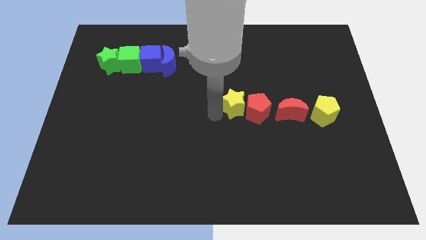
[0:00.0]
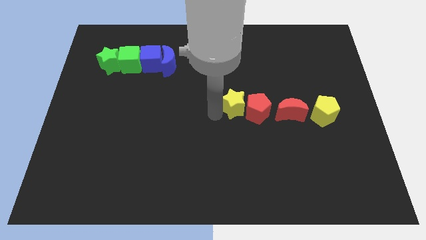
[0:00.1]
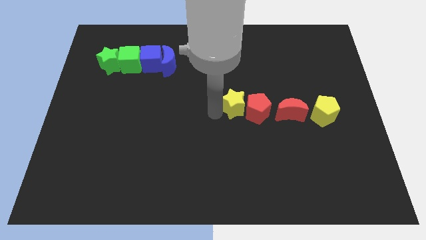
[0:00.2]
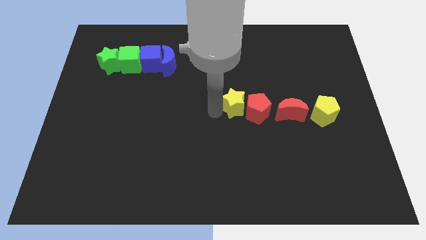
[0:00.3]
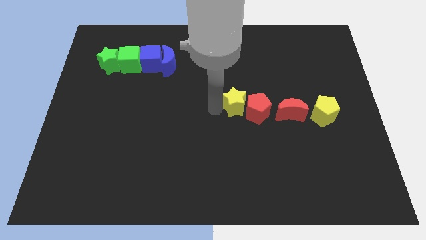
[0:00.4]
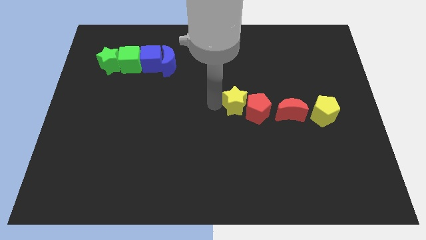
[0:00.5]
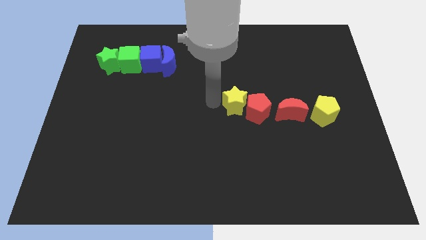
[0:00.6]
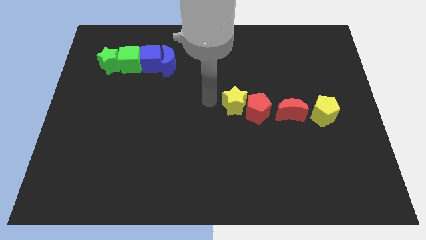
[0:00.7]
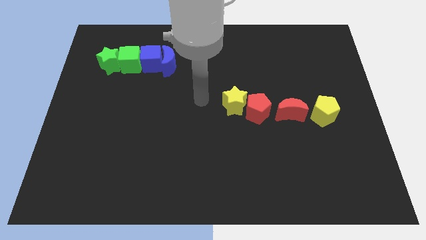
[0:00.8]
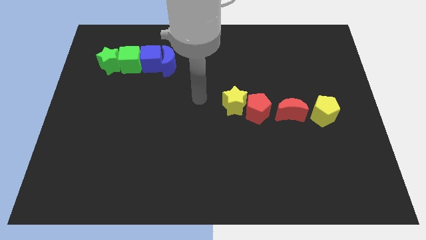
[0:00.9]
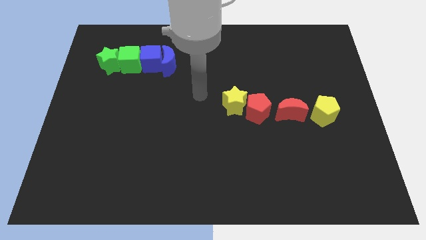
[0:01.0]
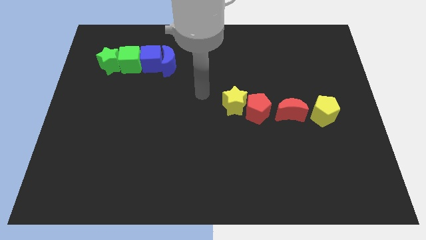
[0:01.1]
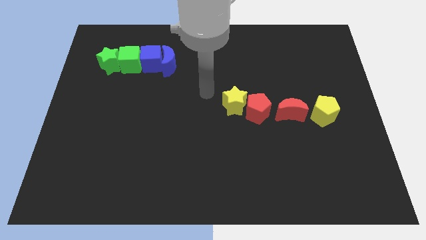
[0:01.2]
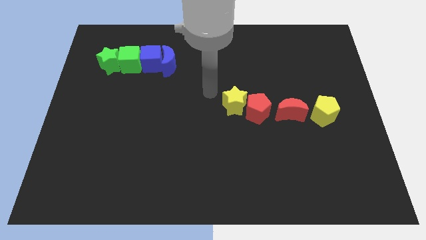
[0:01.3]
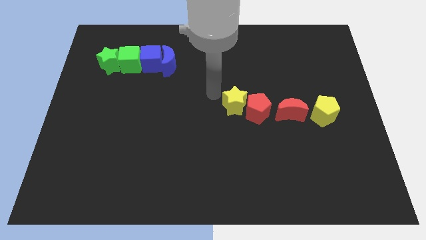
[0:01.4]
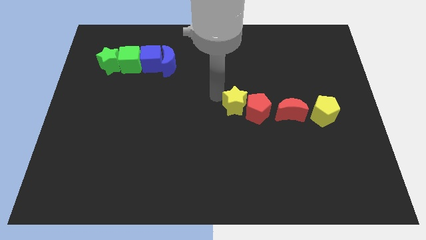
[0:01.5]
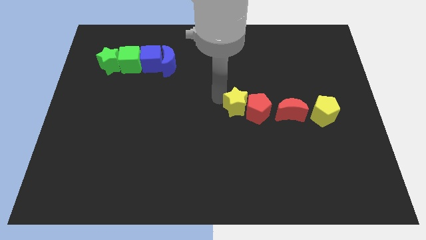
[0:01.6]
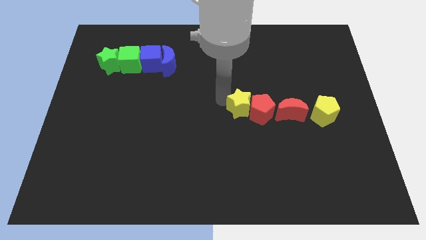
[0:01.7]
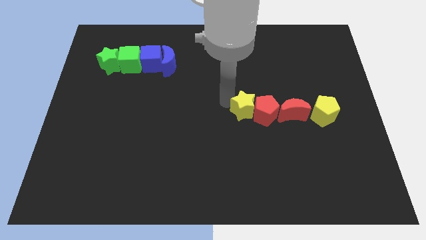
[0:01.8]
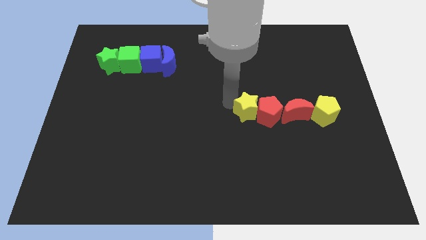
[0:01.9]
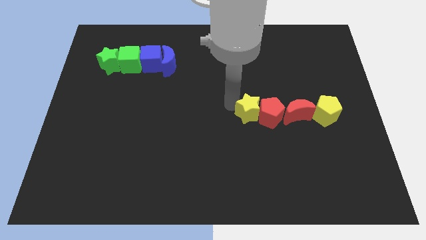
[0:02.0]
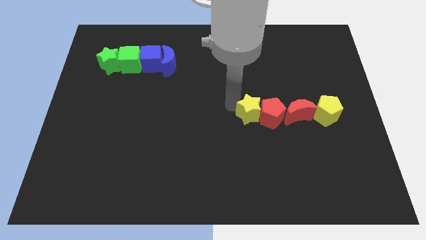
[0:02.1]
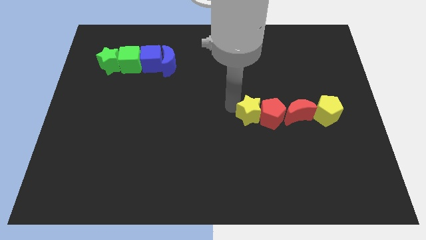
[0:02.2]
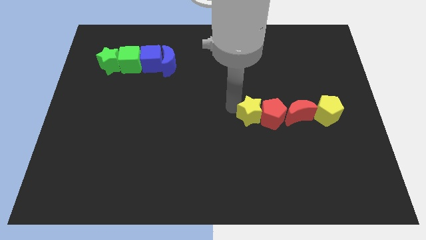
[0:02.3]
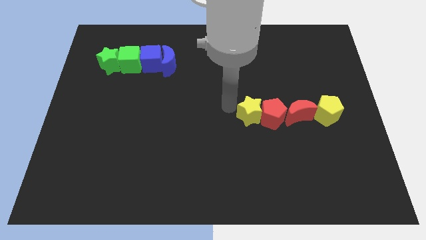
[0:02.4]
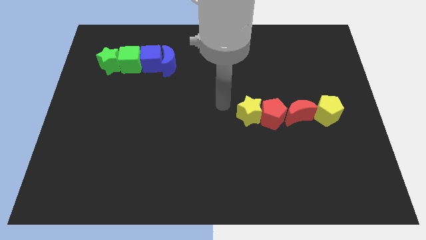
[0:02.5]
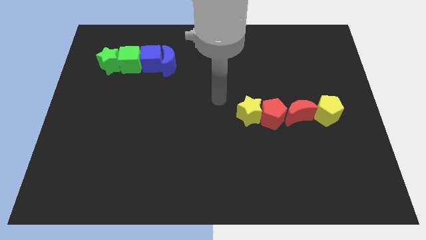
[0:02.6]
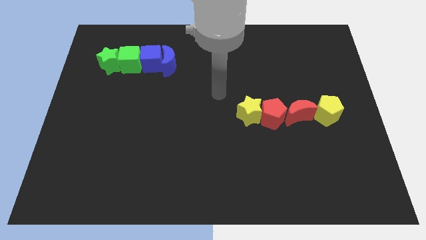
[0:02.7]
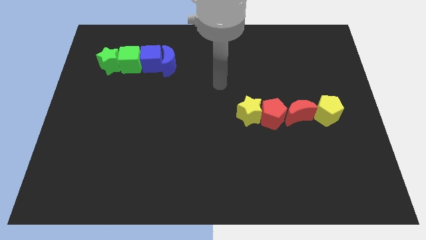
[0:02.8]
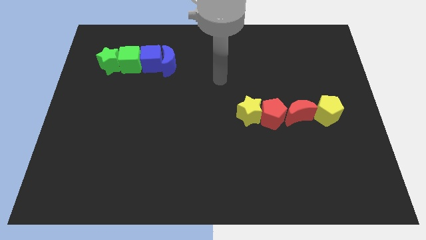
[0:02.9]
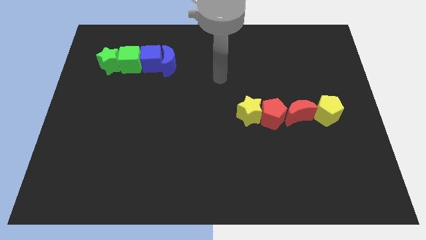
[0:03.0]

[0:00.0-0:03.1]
move yellow star to group of blocks

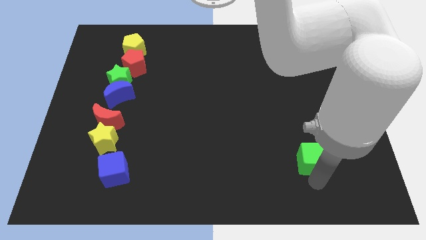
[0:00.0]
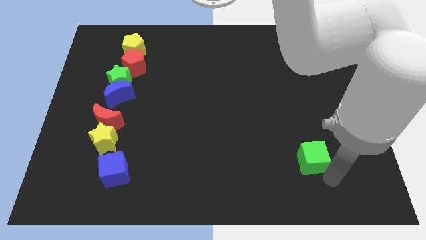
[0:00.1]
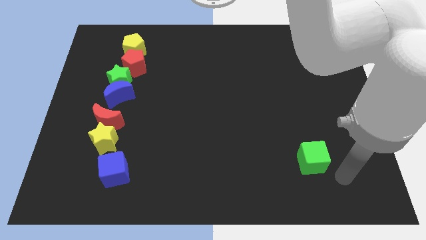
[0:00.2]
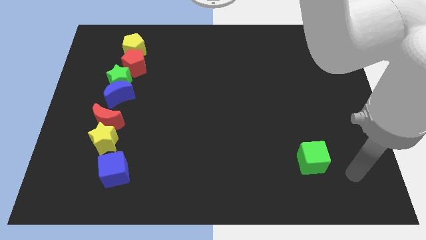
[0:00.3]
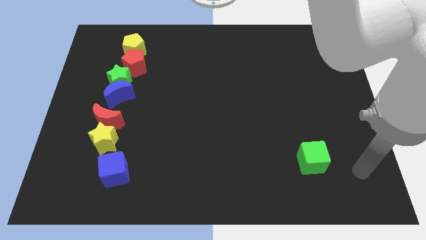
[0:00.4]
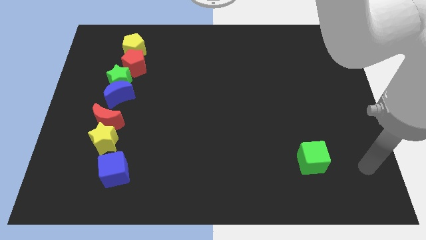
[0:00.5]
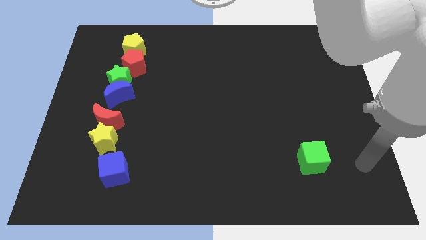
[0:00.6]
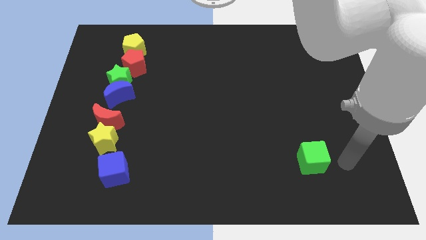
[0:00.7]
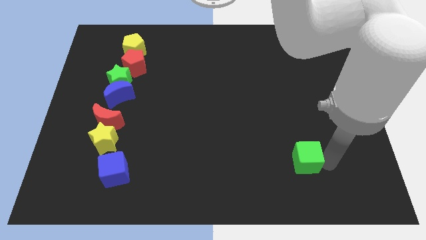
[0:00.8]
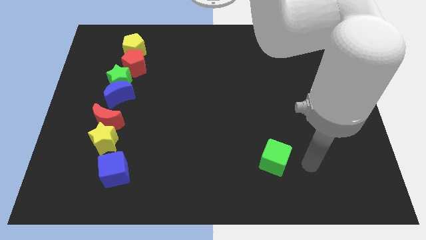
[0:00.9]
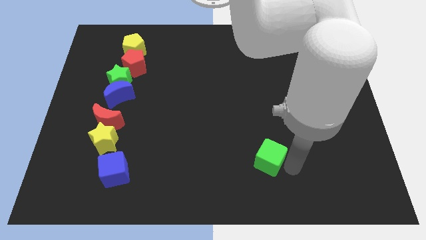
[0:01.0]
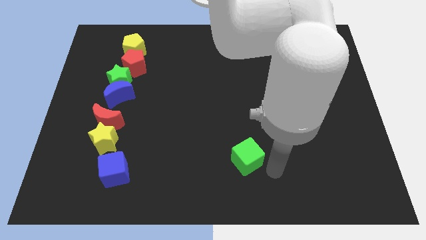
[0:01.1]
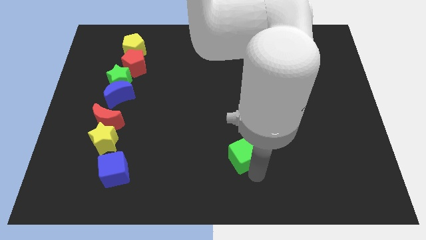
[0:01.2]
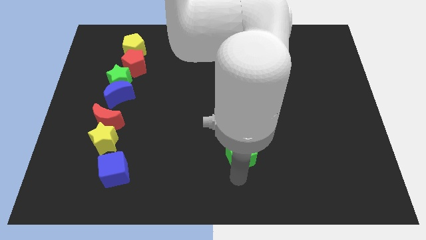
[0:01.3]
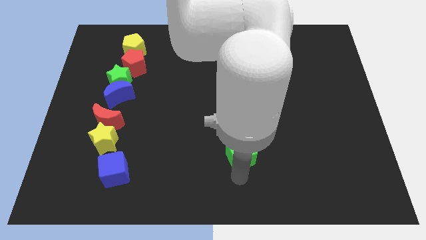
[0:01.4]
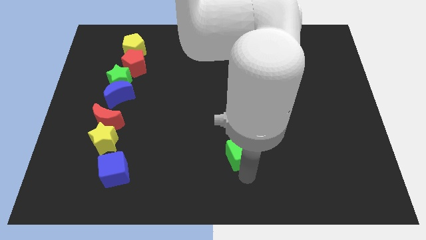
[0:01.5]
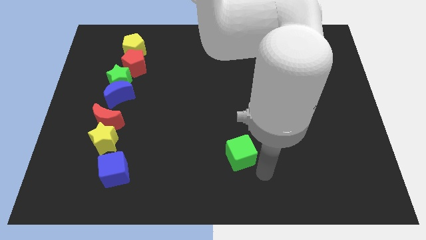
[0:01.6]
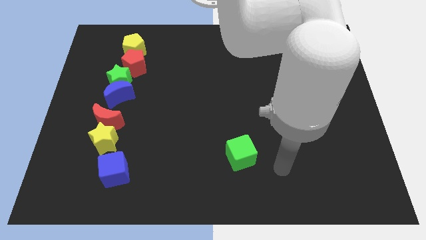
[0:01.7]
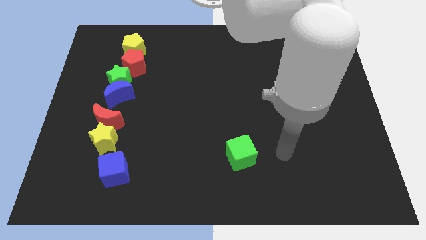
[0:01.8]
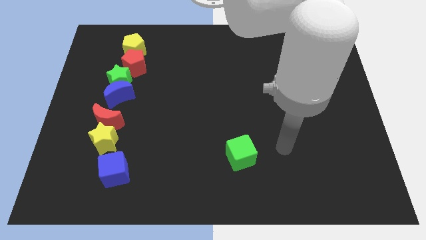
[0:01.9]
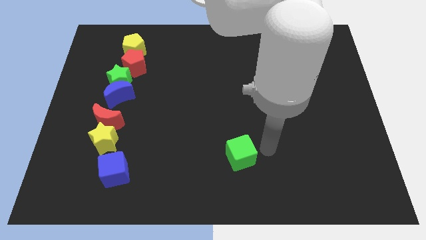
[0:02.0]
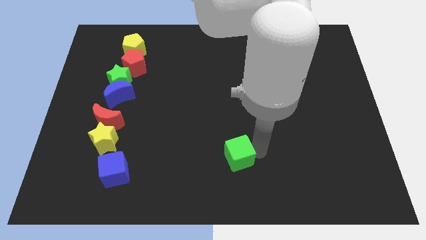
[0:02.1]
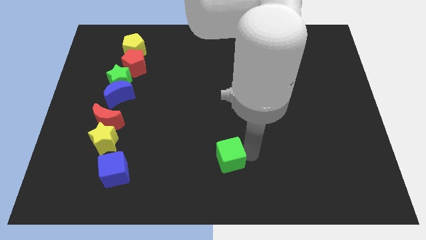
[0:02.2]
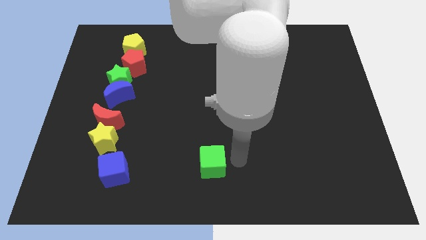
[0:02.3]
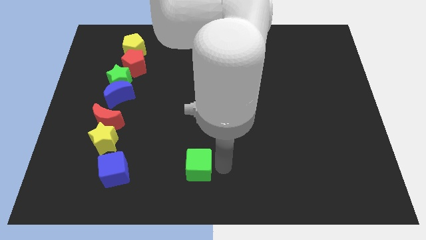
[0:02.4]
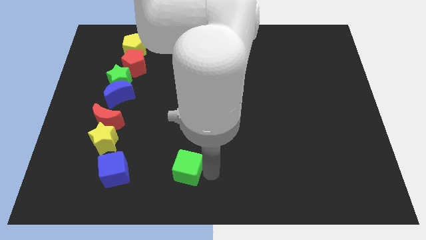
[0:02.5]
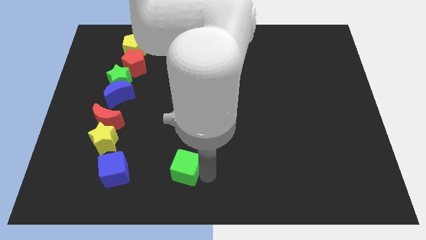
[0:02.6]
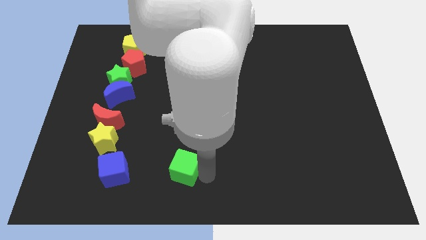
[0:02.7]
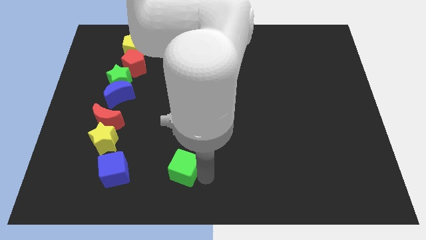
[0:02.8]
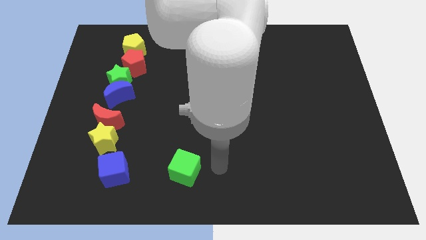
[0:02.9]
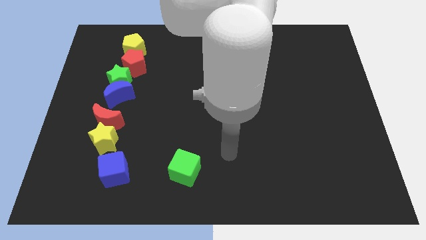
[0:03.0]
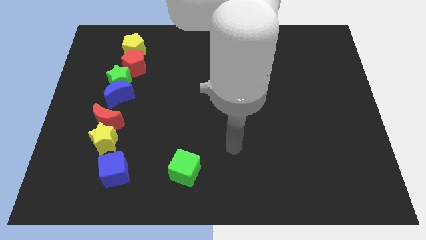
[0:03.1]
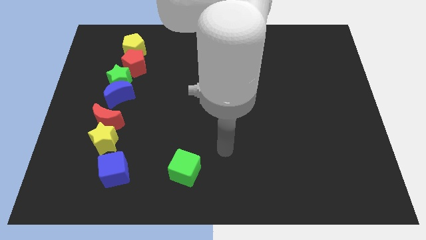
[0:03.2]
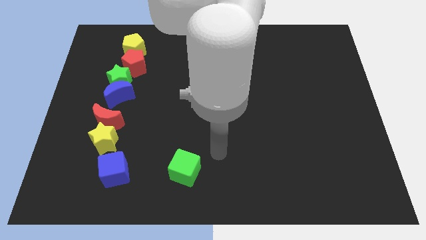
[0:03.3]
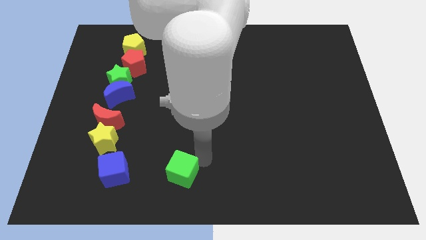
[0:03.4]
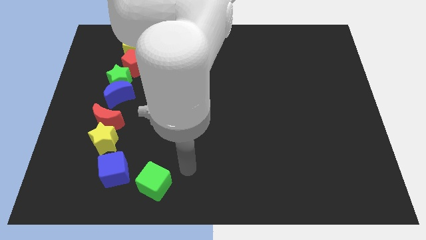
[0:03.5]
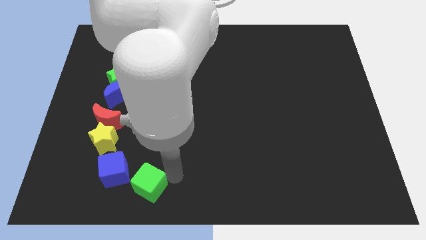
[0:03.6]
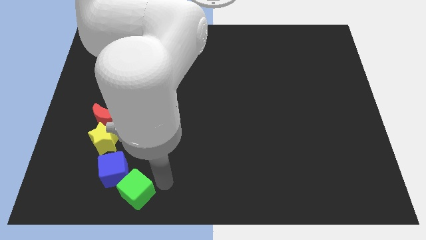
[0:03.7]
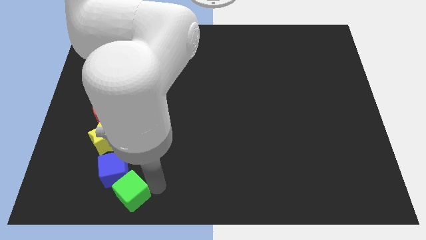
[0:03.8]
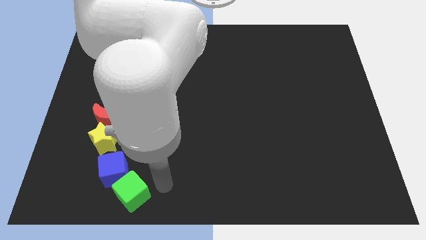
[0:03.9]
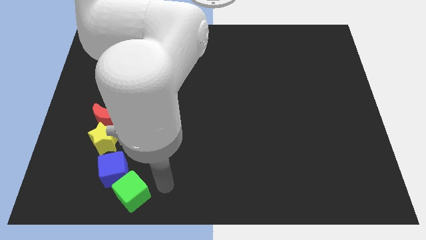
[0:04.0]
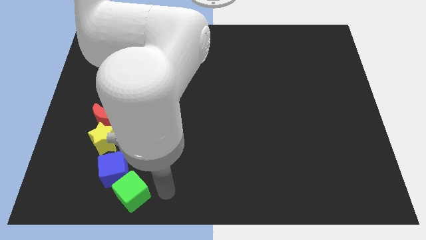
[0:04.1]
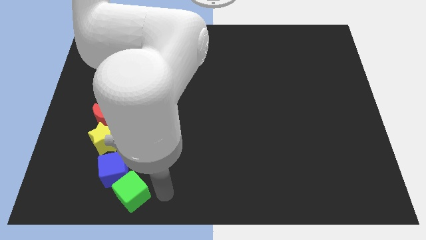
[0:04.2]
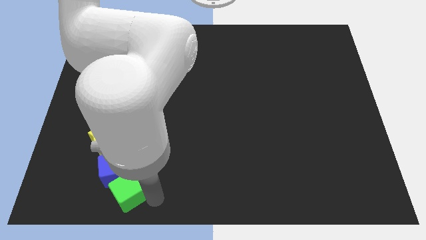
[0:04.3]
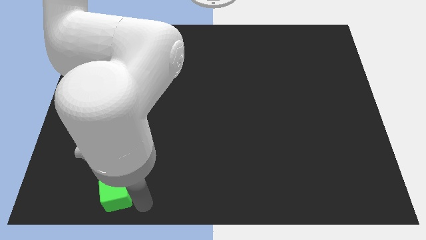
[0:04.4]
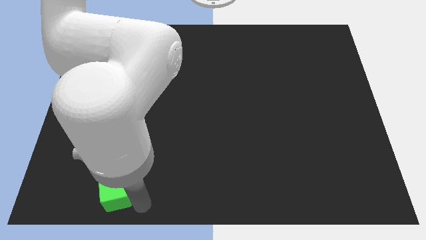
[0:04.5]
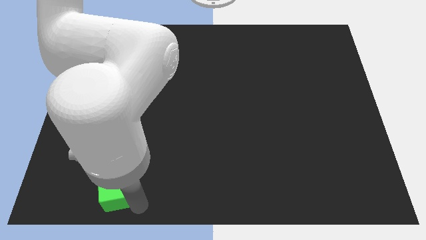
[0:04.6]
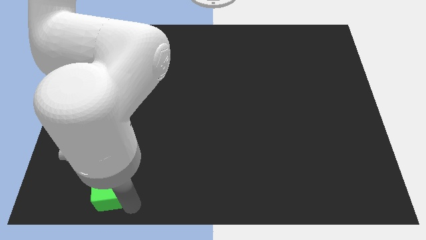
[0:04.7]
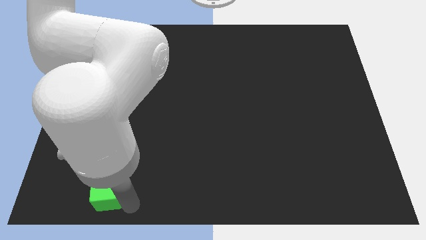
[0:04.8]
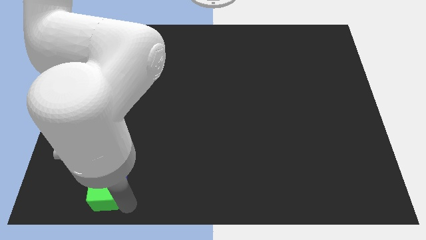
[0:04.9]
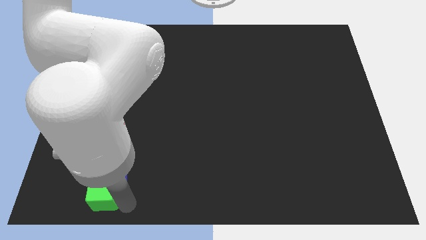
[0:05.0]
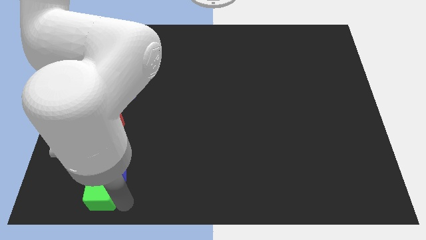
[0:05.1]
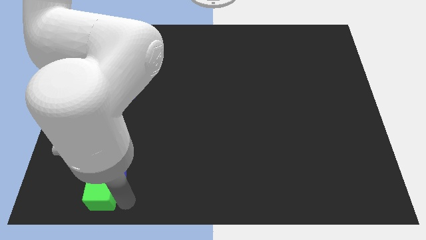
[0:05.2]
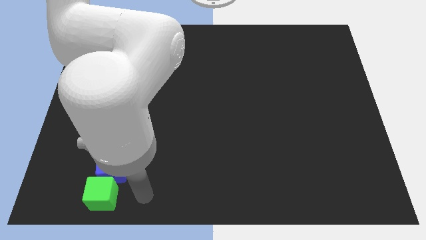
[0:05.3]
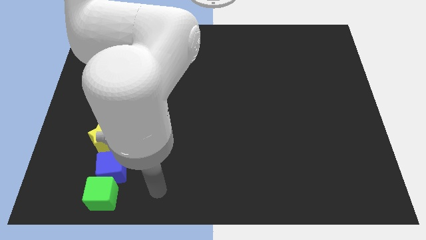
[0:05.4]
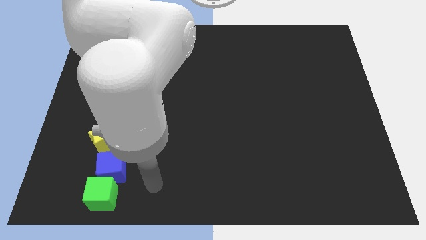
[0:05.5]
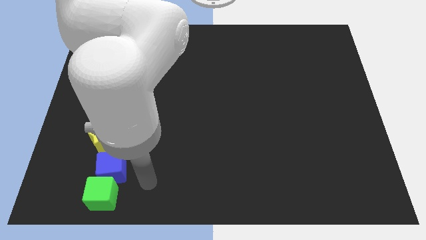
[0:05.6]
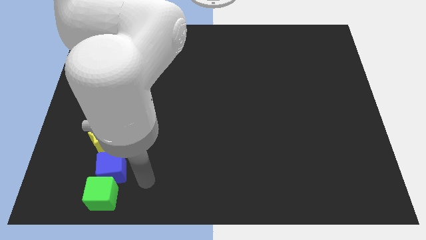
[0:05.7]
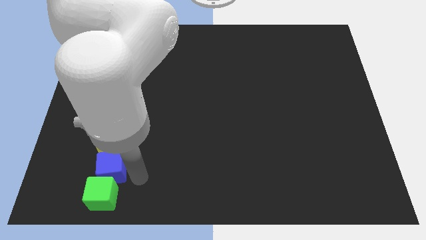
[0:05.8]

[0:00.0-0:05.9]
place the green cube below the blue cube to form a vertical line
